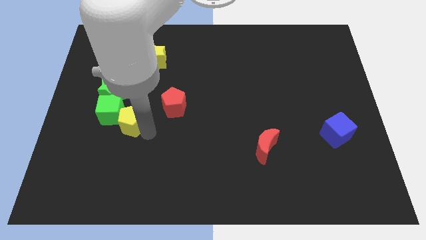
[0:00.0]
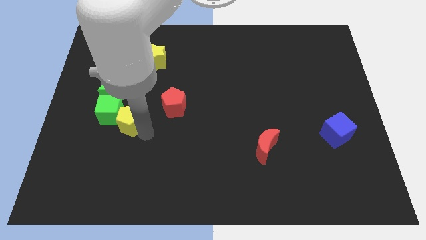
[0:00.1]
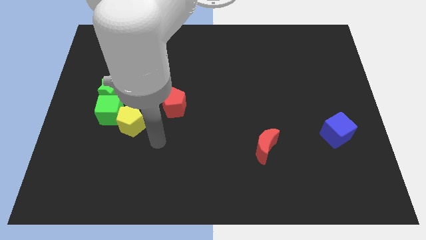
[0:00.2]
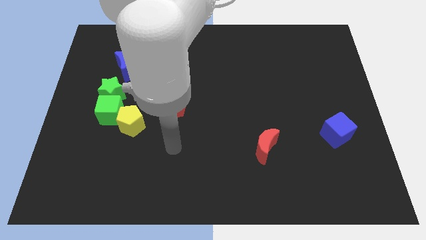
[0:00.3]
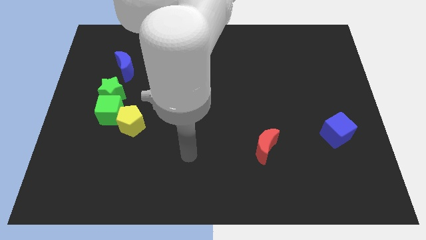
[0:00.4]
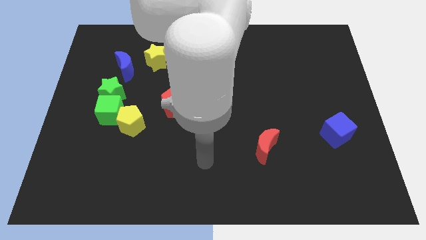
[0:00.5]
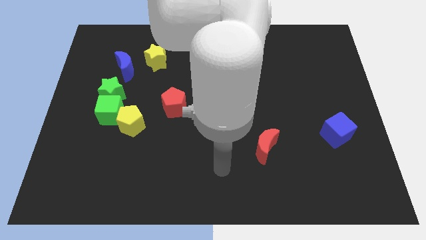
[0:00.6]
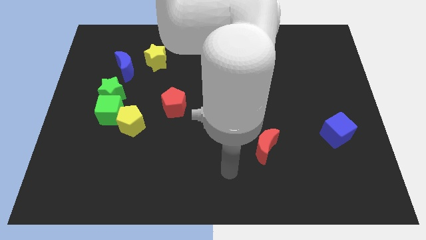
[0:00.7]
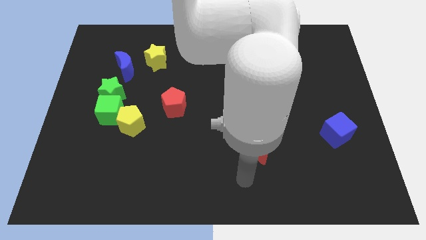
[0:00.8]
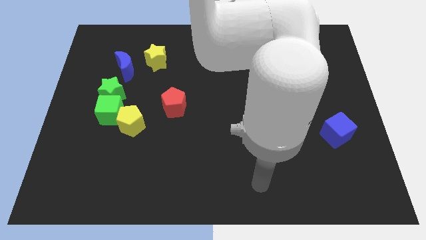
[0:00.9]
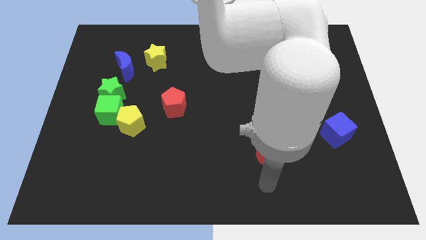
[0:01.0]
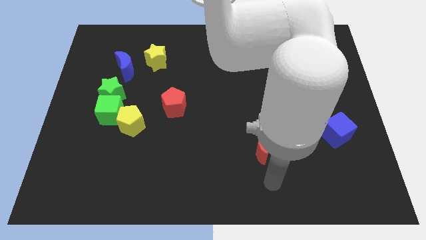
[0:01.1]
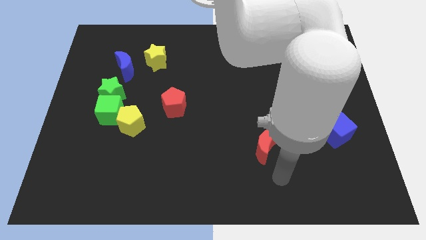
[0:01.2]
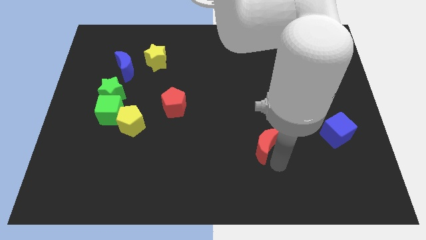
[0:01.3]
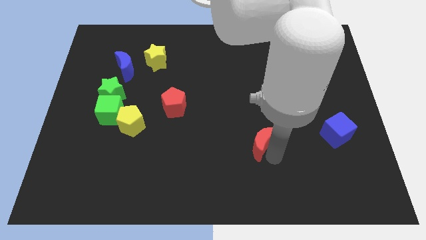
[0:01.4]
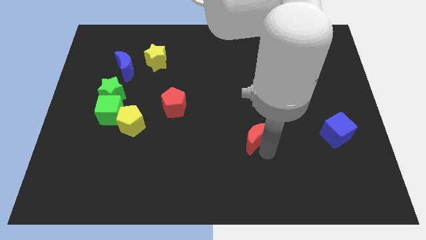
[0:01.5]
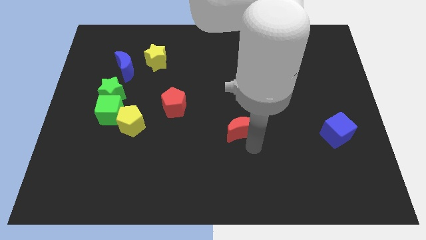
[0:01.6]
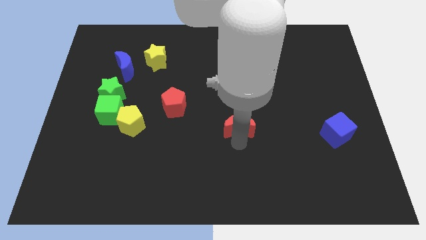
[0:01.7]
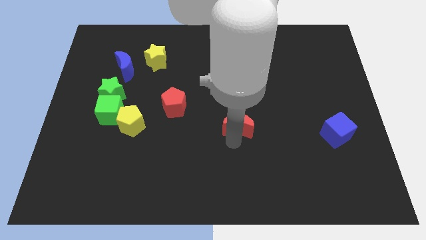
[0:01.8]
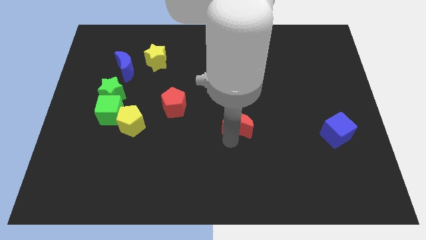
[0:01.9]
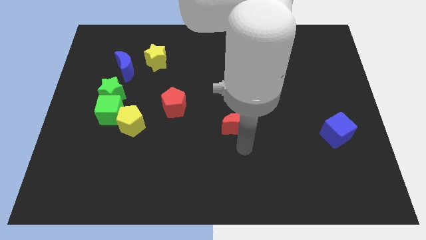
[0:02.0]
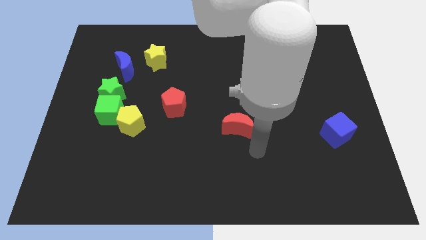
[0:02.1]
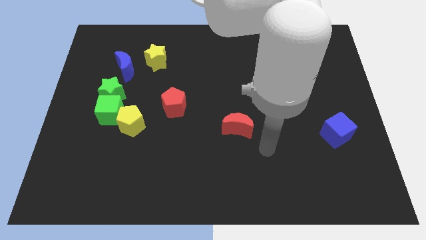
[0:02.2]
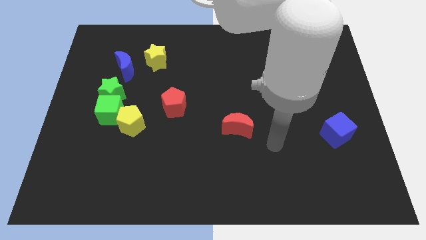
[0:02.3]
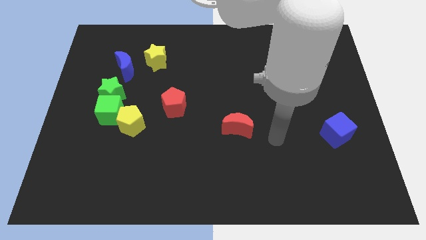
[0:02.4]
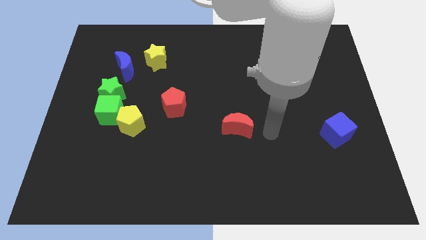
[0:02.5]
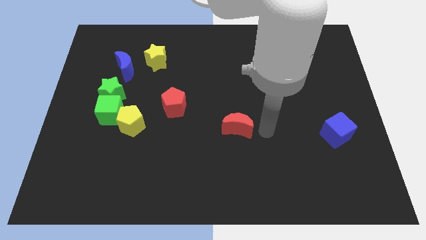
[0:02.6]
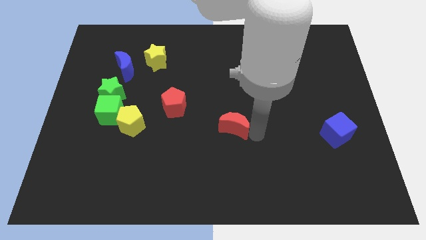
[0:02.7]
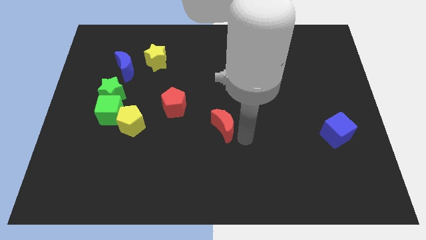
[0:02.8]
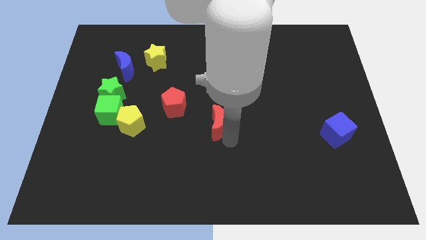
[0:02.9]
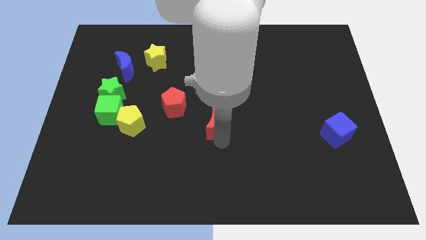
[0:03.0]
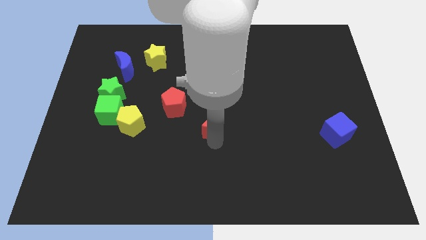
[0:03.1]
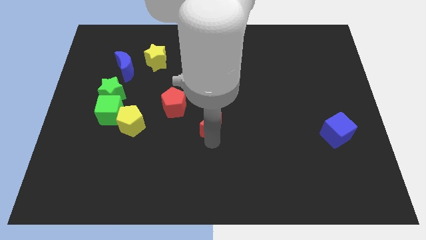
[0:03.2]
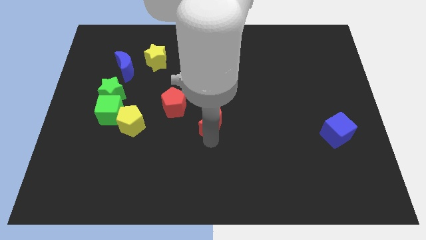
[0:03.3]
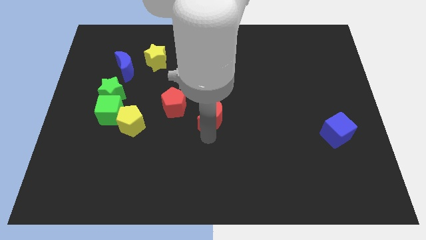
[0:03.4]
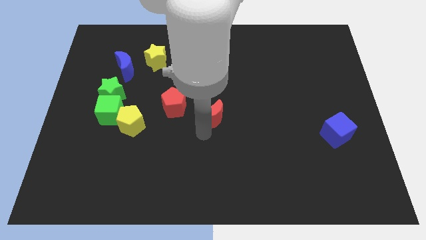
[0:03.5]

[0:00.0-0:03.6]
drag the red crescent near to the right side of the red pentagon

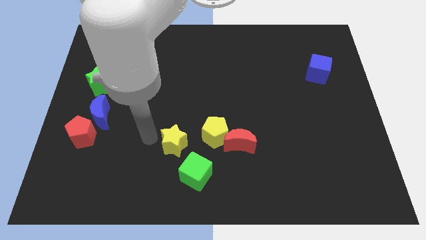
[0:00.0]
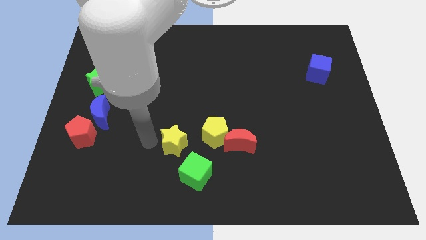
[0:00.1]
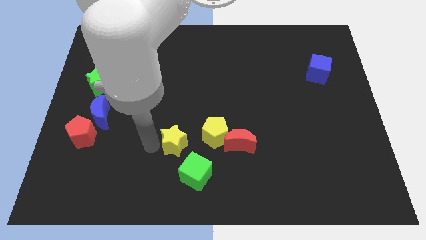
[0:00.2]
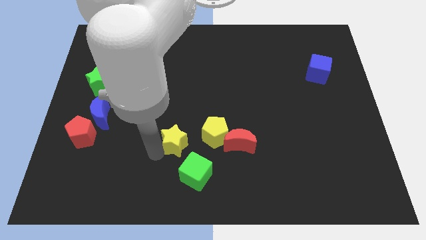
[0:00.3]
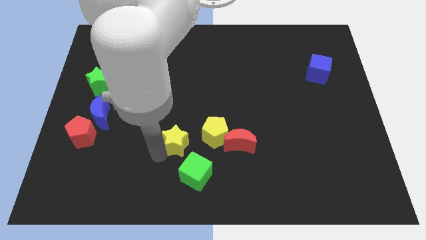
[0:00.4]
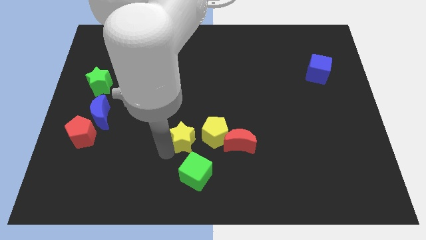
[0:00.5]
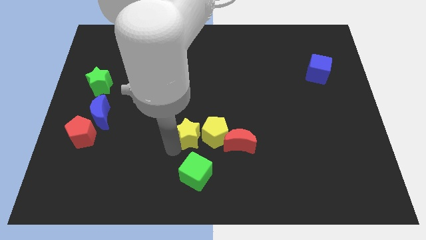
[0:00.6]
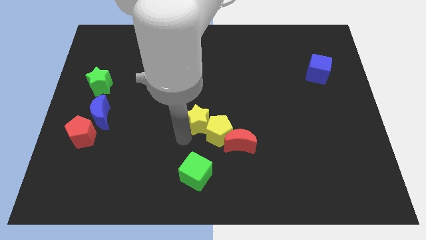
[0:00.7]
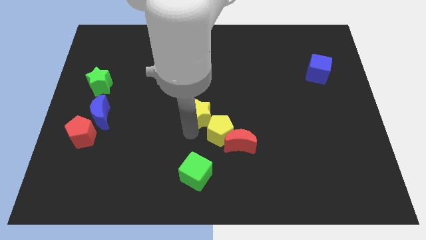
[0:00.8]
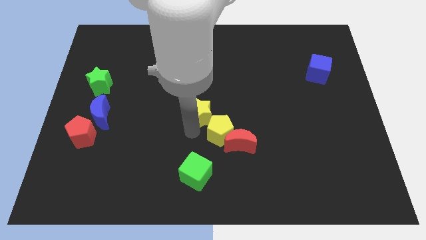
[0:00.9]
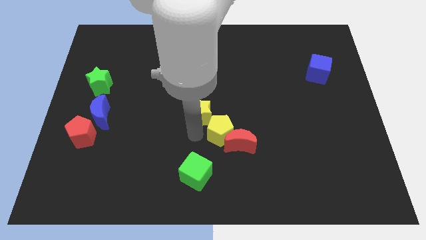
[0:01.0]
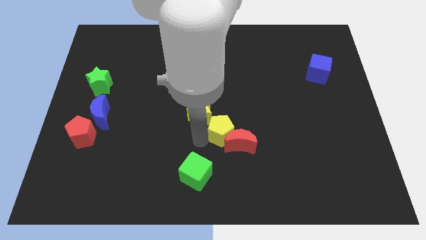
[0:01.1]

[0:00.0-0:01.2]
push the yellow star into the yellow pentagon

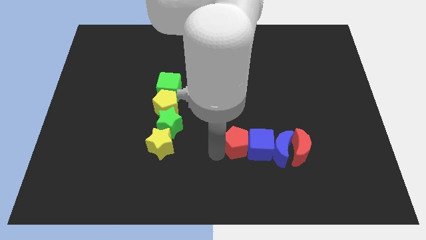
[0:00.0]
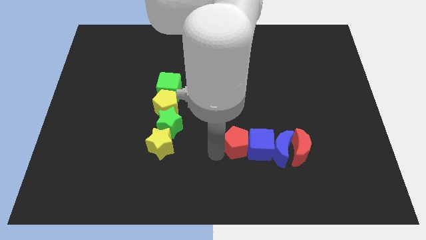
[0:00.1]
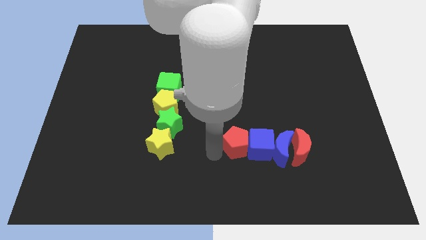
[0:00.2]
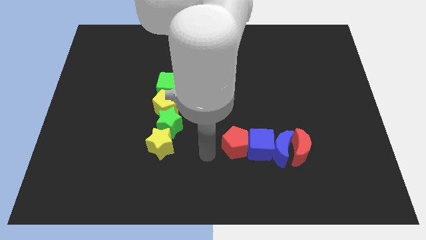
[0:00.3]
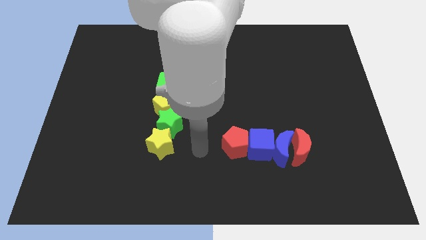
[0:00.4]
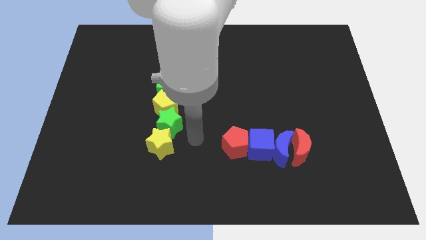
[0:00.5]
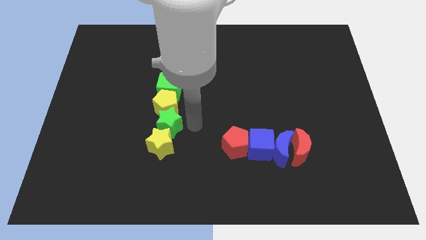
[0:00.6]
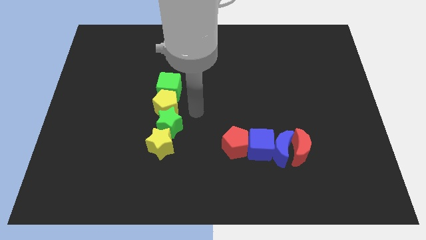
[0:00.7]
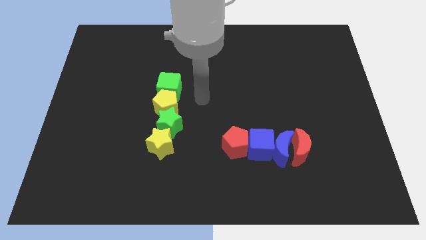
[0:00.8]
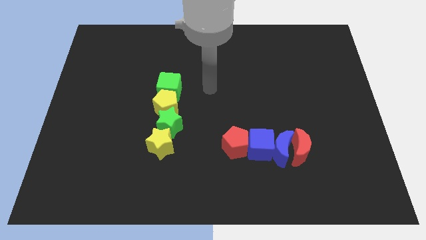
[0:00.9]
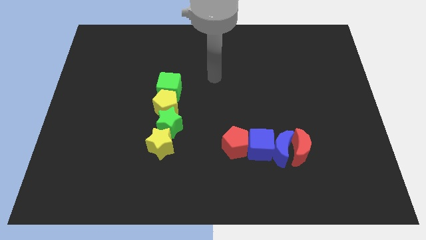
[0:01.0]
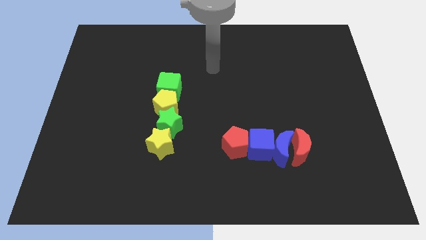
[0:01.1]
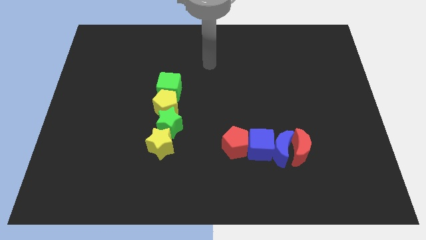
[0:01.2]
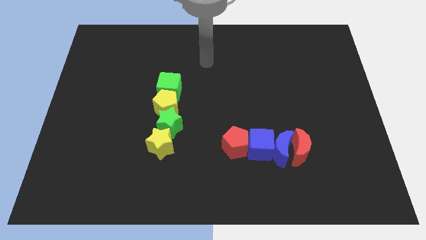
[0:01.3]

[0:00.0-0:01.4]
move your arm away from the red pentagon

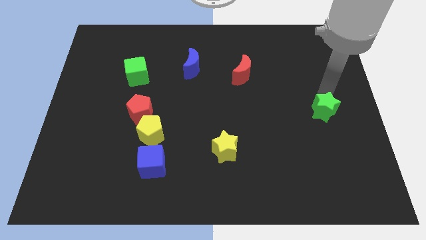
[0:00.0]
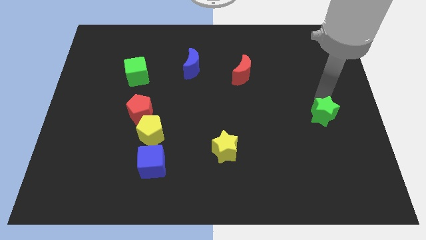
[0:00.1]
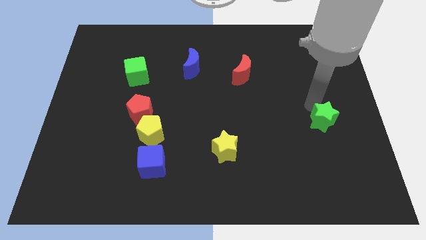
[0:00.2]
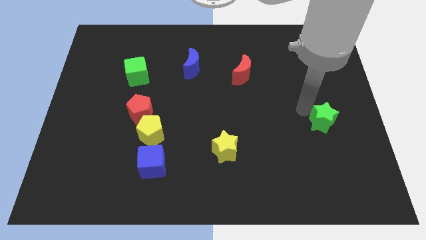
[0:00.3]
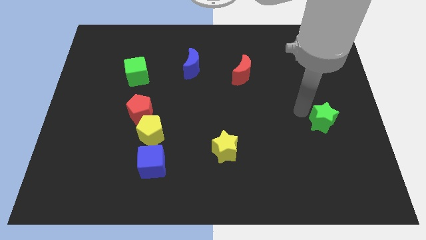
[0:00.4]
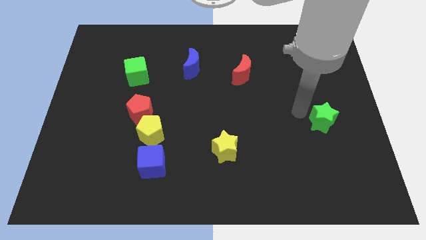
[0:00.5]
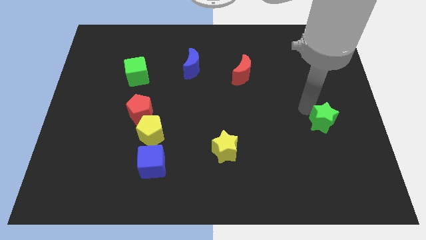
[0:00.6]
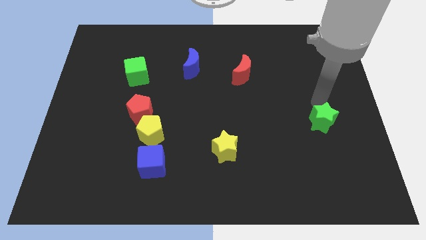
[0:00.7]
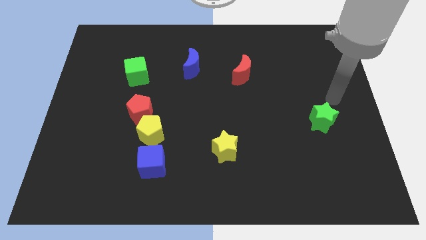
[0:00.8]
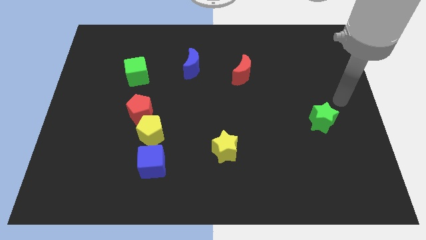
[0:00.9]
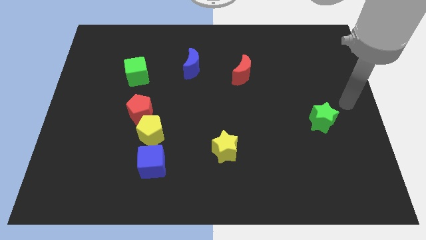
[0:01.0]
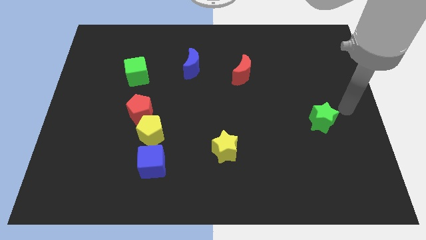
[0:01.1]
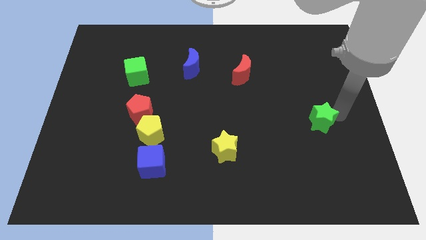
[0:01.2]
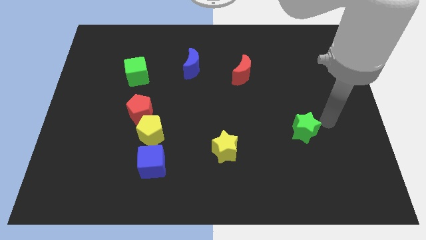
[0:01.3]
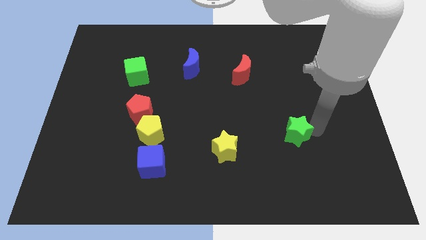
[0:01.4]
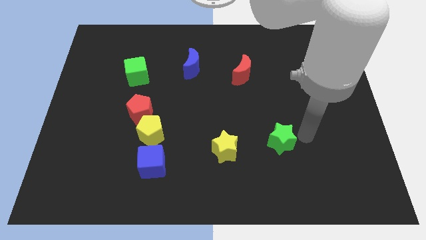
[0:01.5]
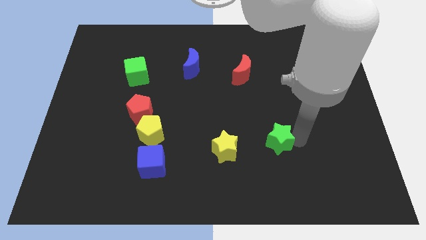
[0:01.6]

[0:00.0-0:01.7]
move the green star to the bottom center

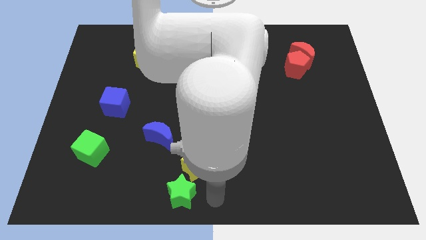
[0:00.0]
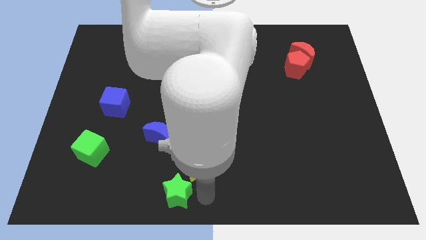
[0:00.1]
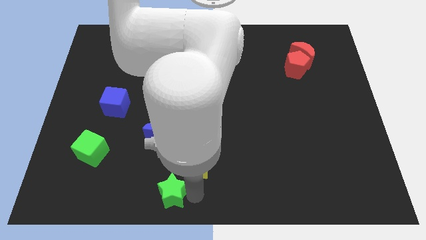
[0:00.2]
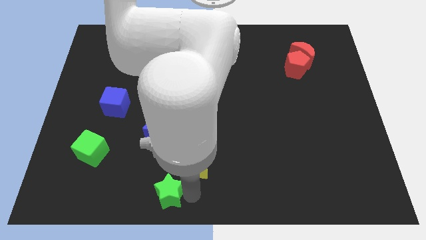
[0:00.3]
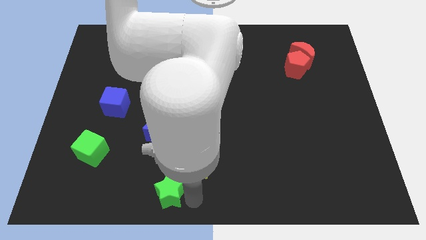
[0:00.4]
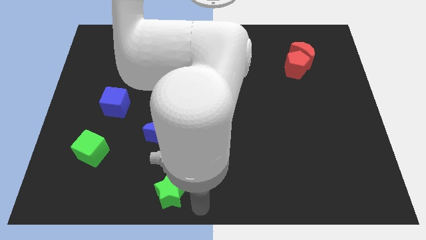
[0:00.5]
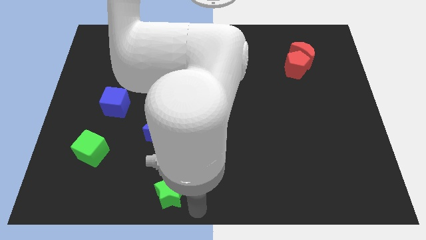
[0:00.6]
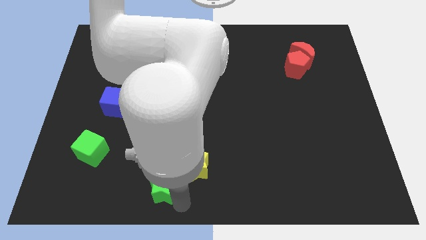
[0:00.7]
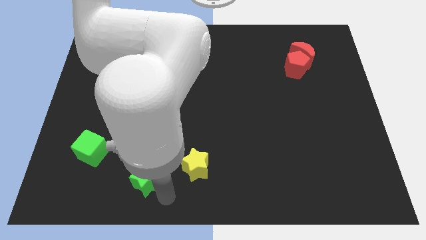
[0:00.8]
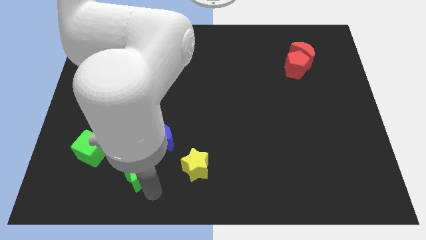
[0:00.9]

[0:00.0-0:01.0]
slide green star towards green cube
